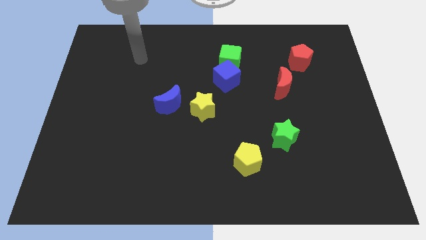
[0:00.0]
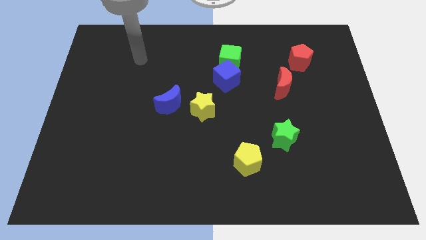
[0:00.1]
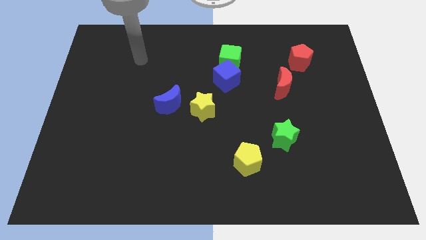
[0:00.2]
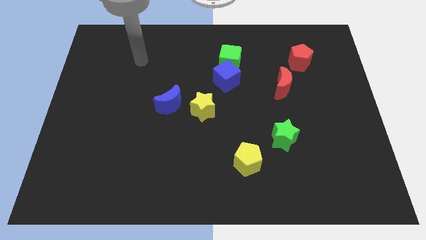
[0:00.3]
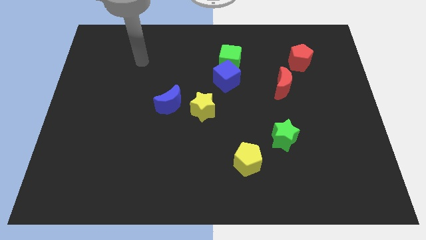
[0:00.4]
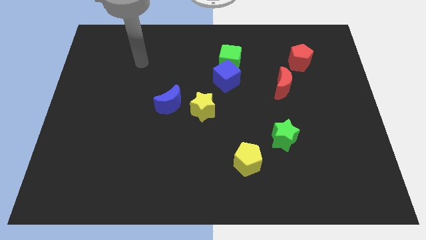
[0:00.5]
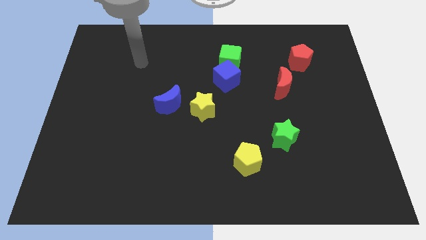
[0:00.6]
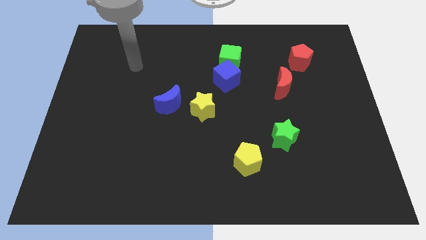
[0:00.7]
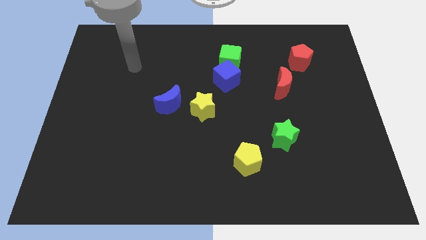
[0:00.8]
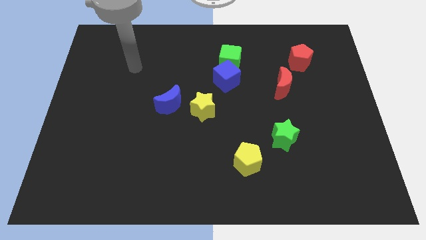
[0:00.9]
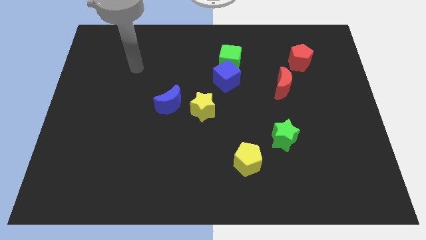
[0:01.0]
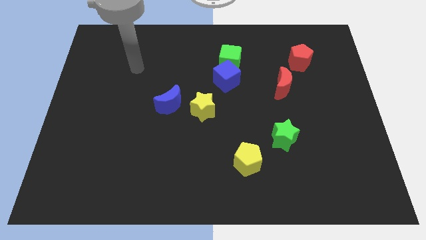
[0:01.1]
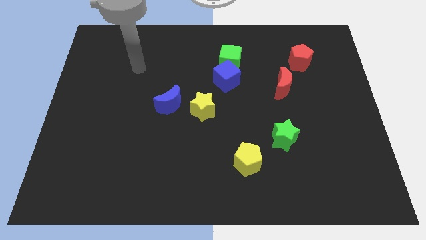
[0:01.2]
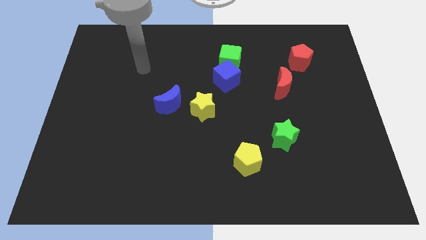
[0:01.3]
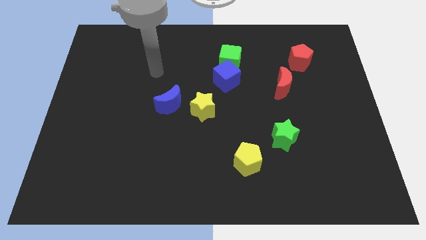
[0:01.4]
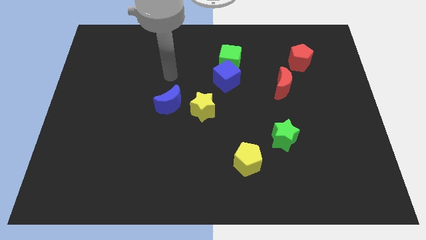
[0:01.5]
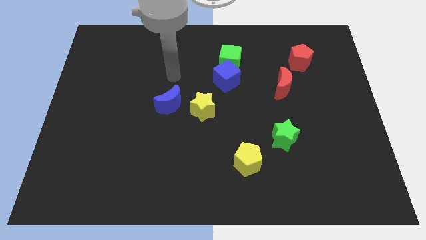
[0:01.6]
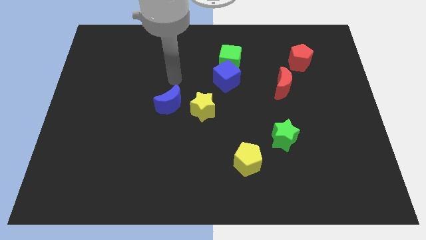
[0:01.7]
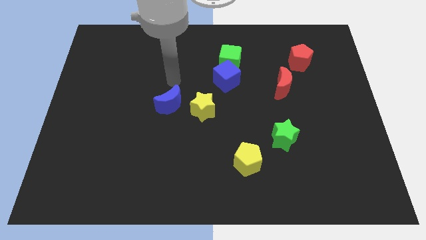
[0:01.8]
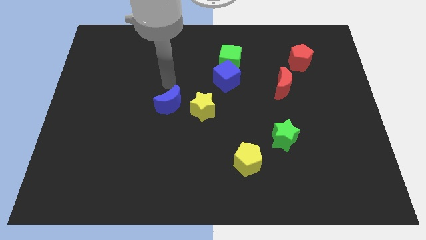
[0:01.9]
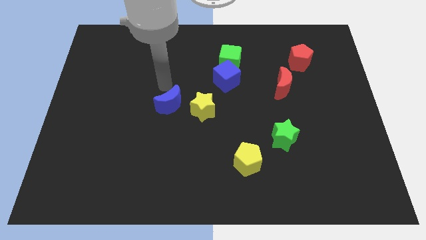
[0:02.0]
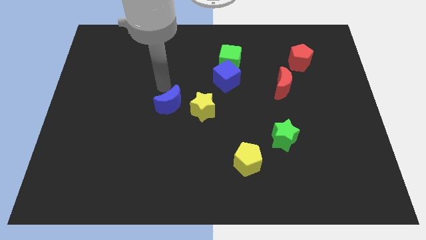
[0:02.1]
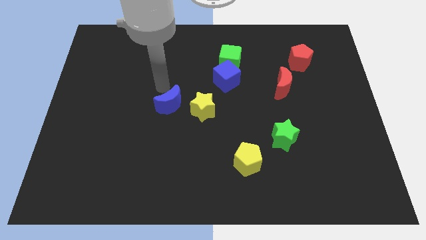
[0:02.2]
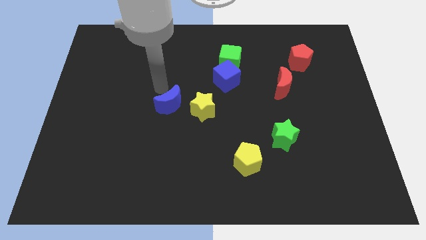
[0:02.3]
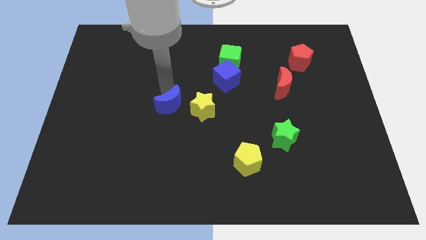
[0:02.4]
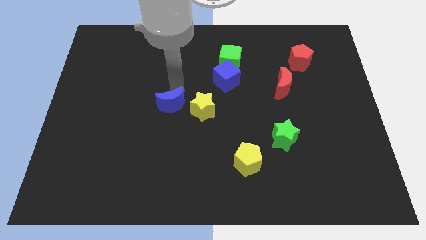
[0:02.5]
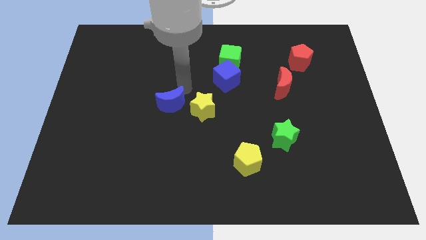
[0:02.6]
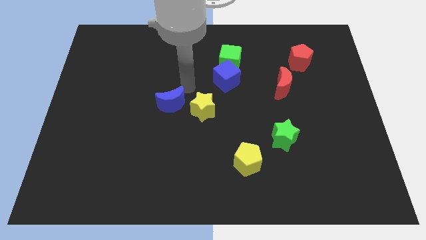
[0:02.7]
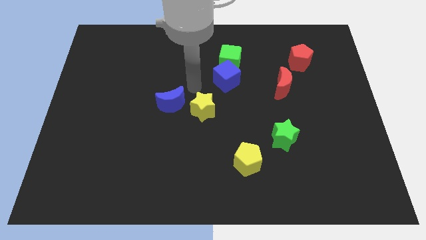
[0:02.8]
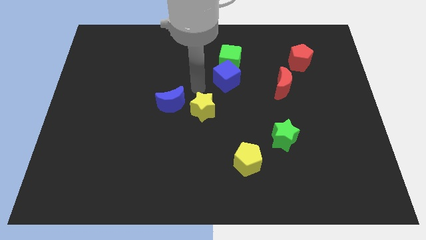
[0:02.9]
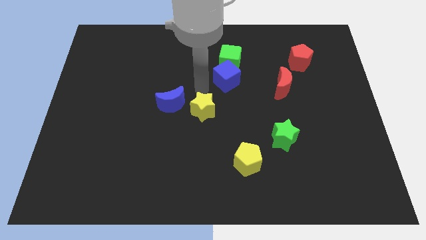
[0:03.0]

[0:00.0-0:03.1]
touch the blue moon

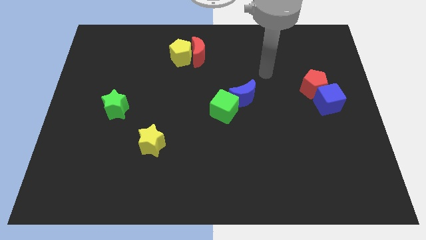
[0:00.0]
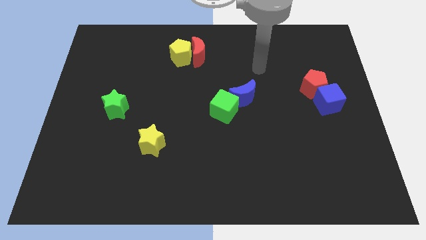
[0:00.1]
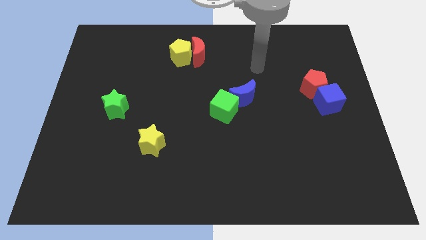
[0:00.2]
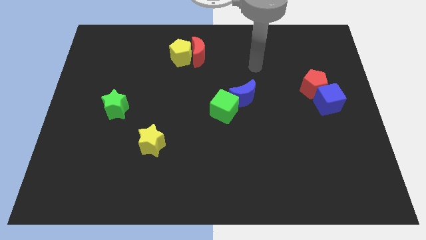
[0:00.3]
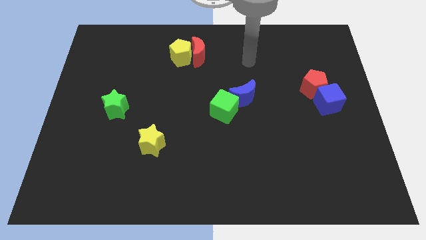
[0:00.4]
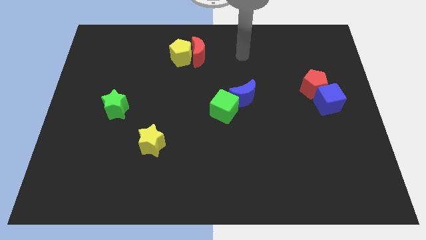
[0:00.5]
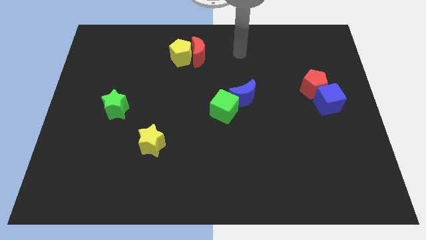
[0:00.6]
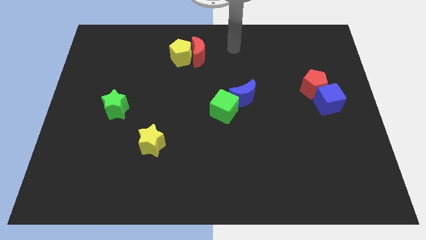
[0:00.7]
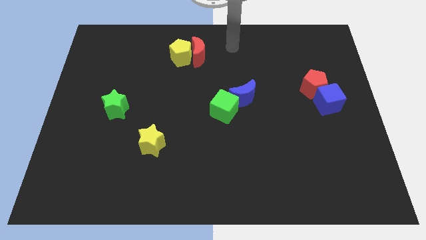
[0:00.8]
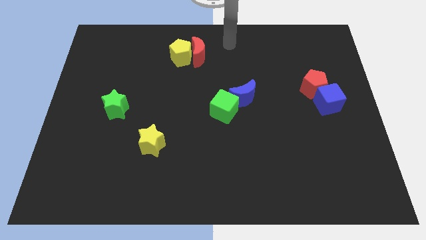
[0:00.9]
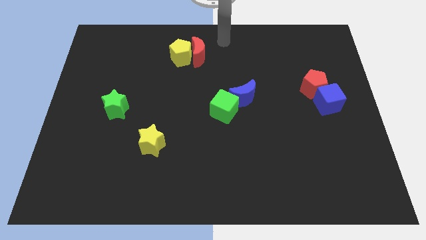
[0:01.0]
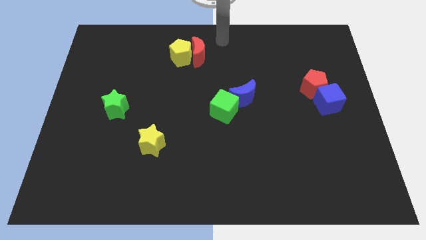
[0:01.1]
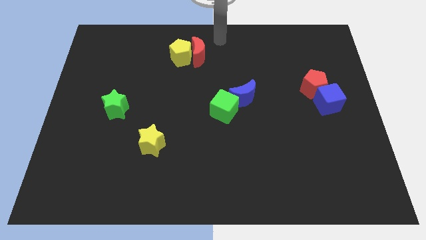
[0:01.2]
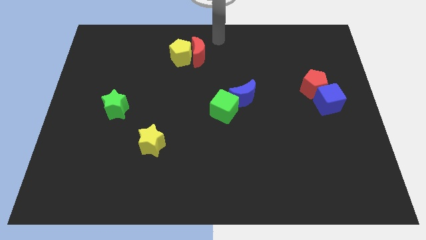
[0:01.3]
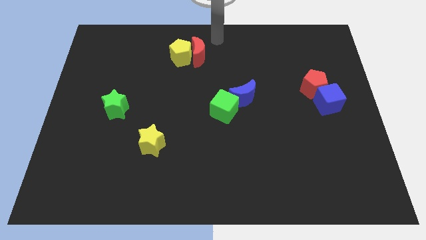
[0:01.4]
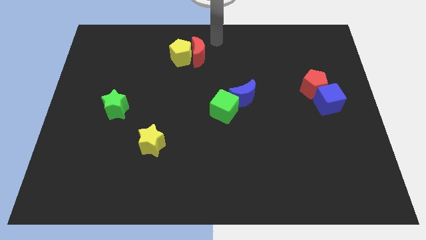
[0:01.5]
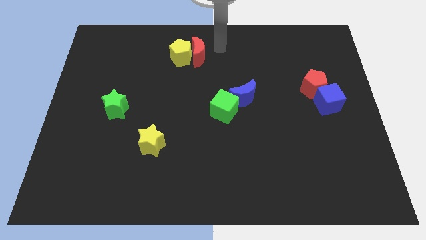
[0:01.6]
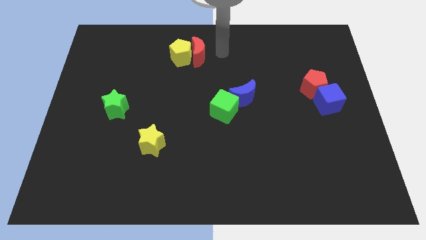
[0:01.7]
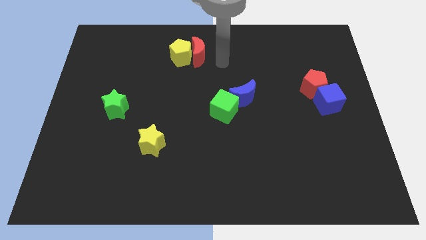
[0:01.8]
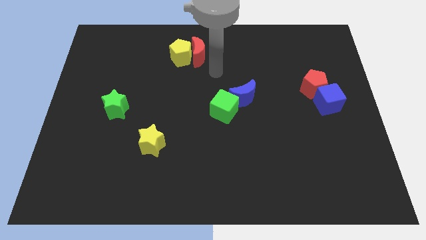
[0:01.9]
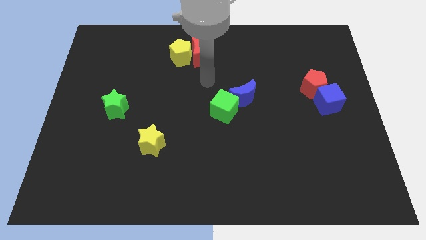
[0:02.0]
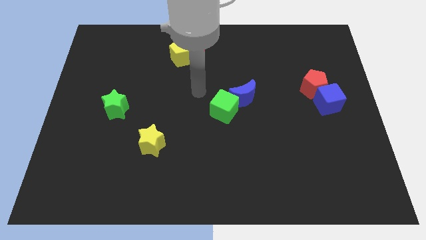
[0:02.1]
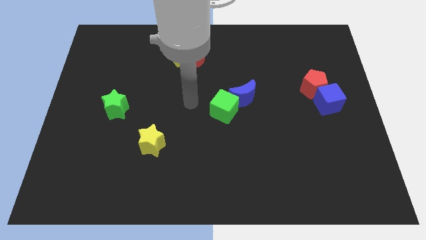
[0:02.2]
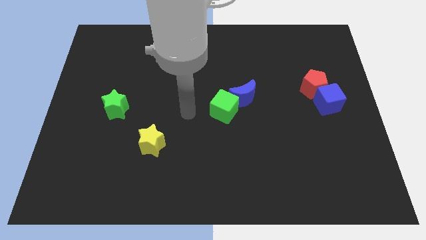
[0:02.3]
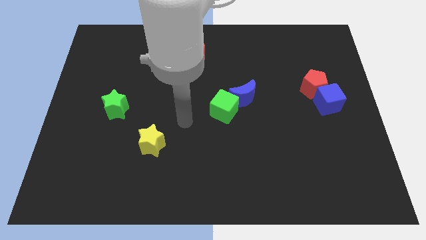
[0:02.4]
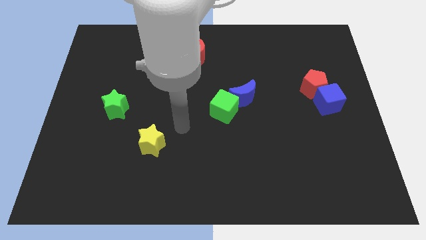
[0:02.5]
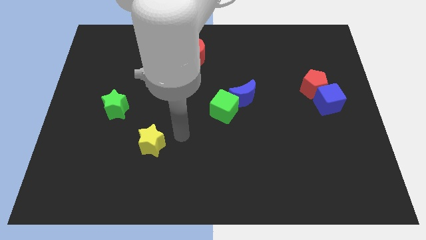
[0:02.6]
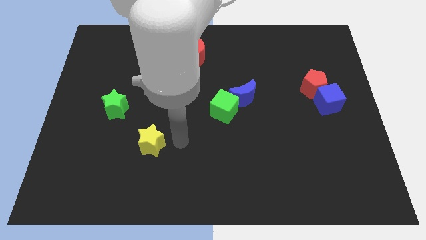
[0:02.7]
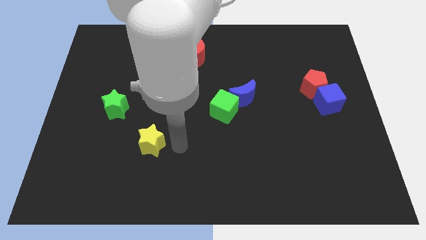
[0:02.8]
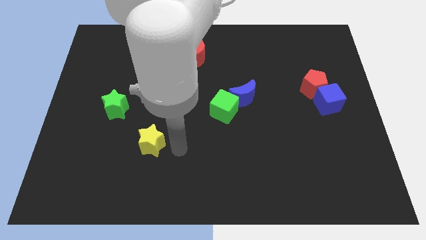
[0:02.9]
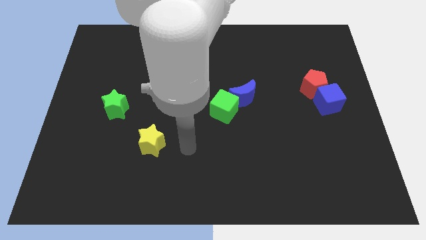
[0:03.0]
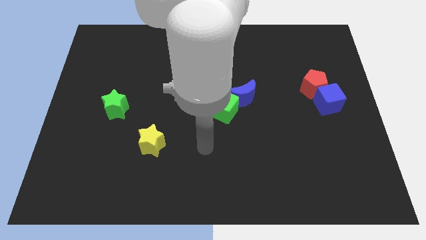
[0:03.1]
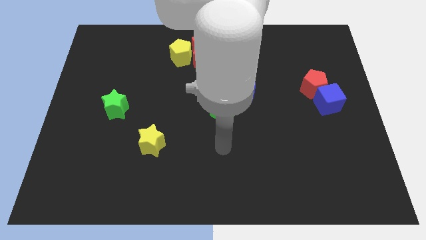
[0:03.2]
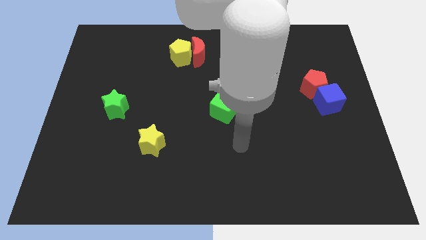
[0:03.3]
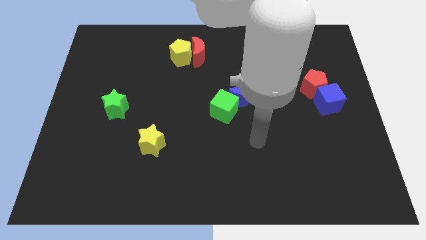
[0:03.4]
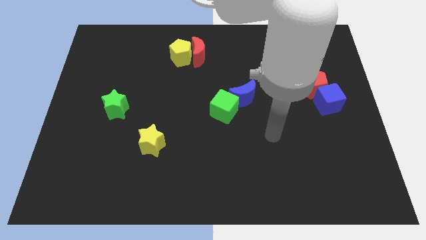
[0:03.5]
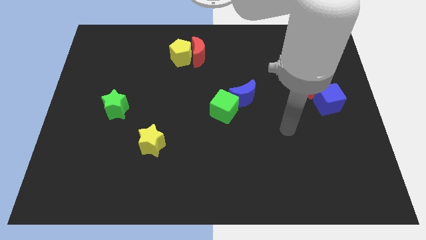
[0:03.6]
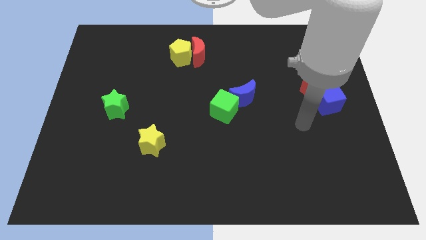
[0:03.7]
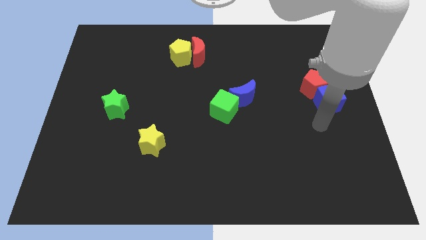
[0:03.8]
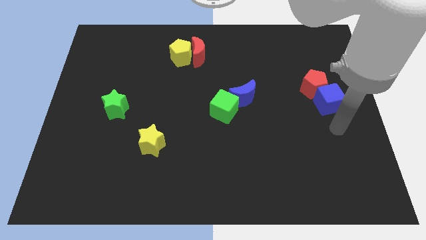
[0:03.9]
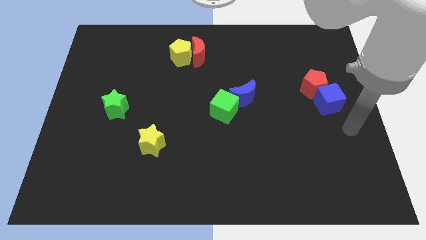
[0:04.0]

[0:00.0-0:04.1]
move your arm to the bottom of the blue cube

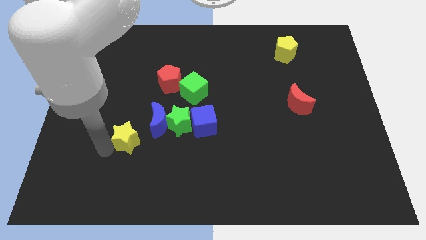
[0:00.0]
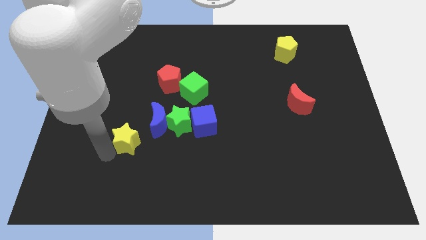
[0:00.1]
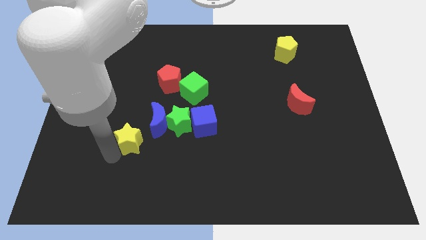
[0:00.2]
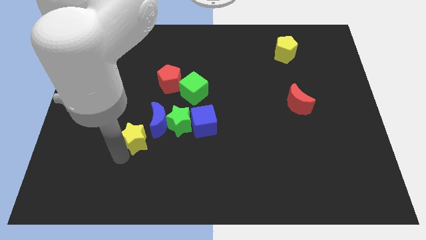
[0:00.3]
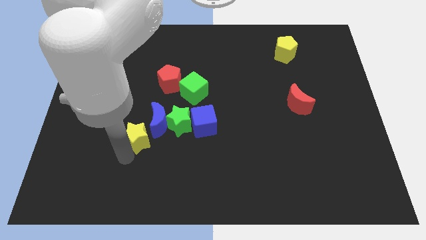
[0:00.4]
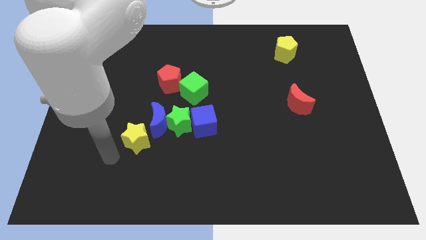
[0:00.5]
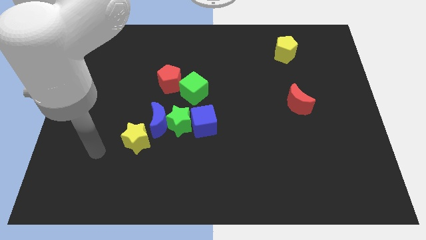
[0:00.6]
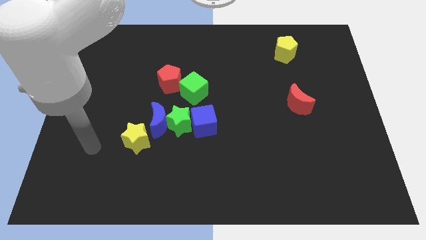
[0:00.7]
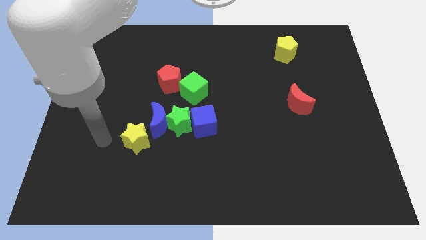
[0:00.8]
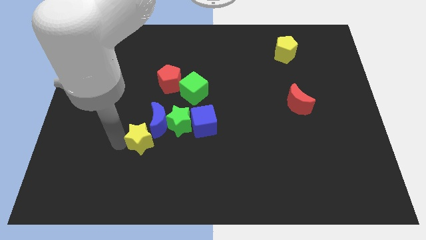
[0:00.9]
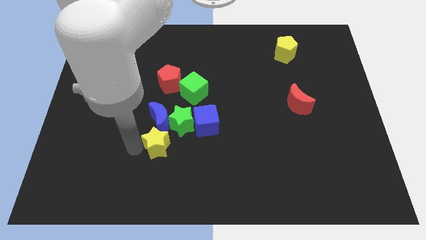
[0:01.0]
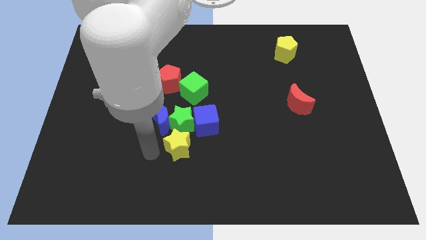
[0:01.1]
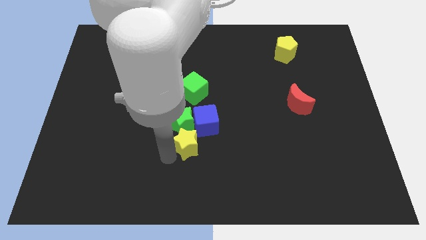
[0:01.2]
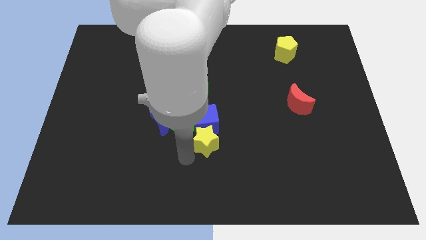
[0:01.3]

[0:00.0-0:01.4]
put the yellow star vertically below the blue cube

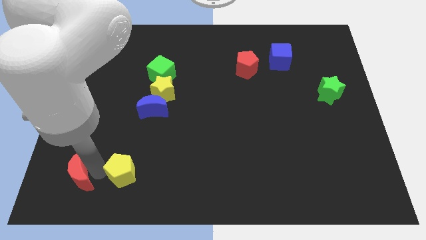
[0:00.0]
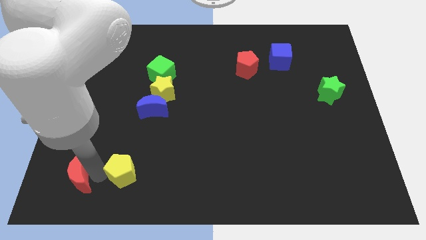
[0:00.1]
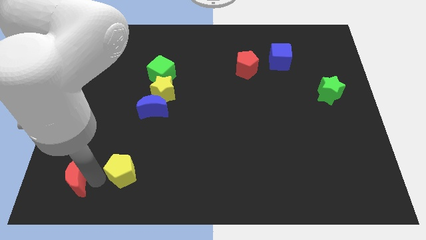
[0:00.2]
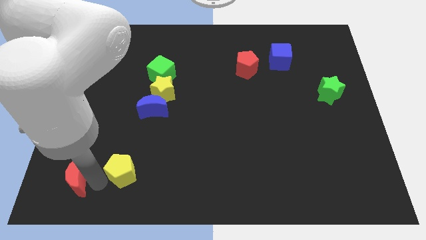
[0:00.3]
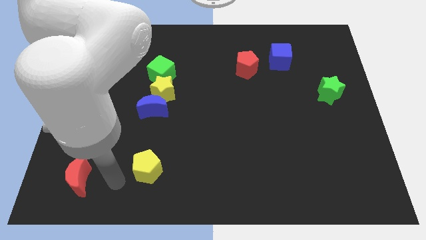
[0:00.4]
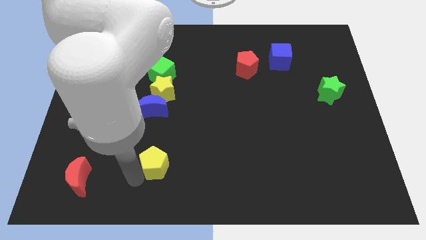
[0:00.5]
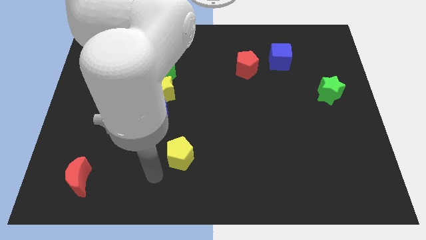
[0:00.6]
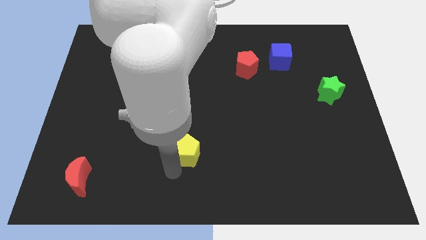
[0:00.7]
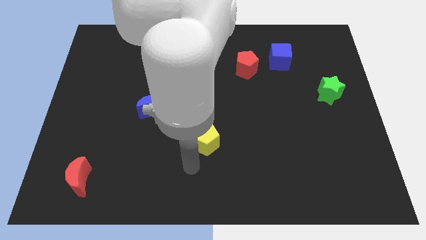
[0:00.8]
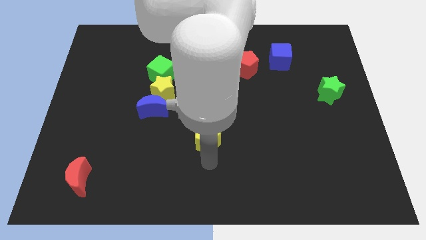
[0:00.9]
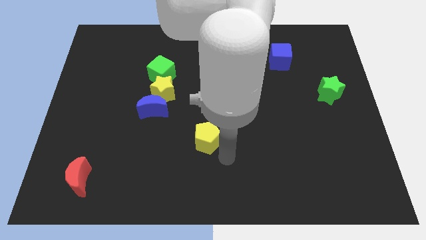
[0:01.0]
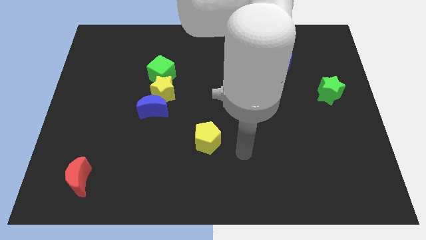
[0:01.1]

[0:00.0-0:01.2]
separate the yellow pentagon from the red moon
